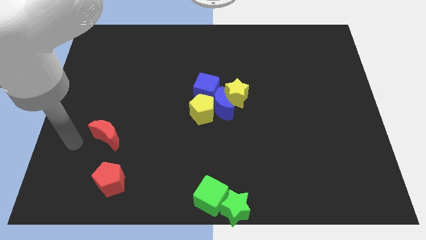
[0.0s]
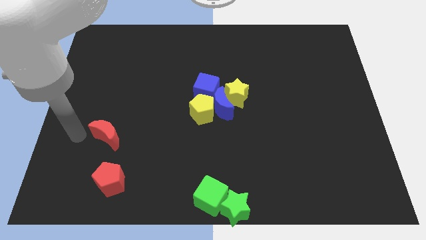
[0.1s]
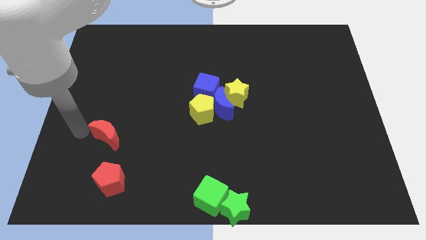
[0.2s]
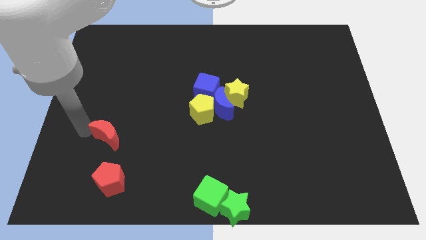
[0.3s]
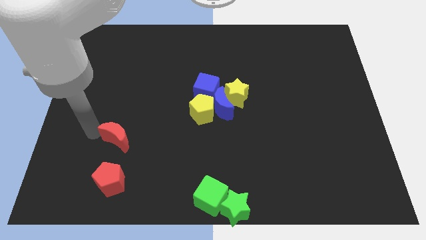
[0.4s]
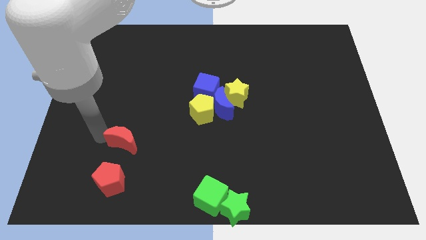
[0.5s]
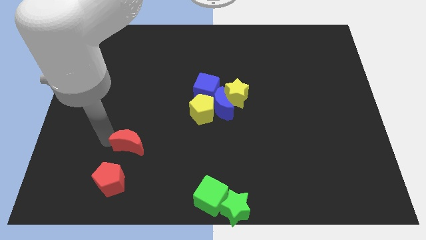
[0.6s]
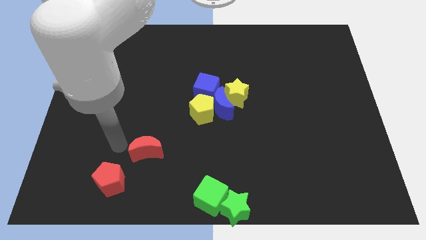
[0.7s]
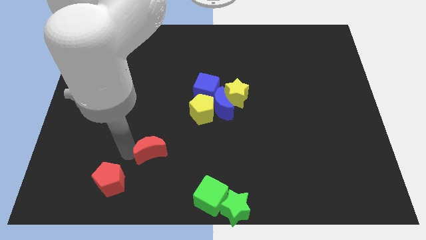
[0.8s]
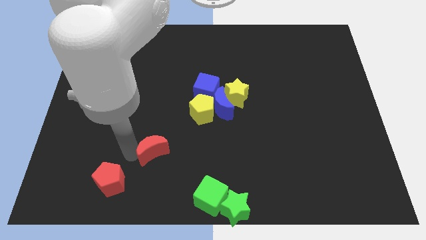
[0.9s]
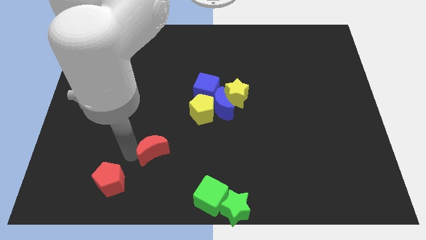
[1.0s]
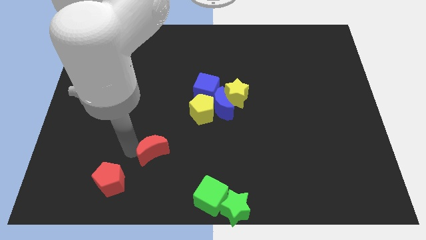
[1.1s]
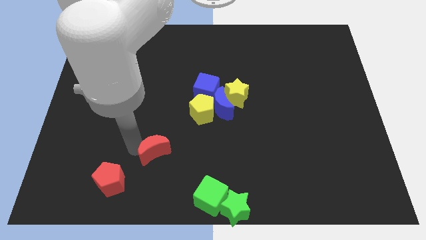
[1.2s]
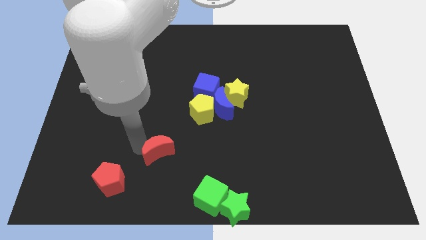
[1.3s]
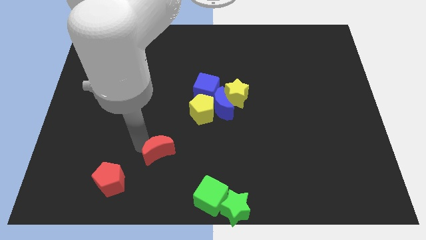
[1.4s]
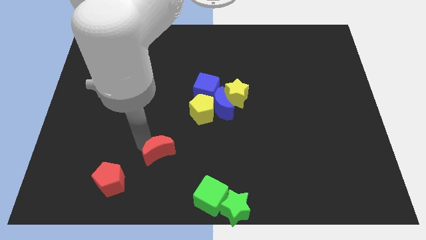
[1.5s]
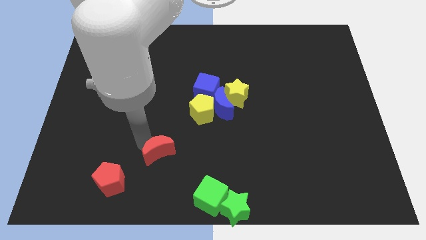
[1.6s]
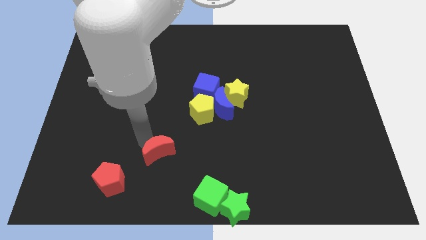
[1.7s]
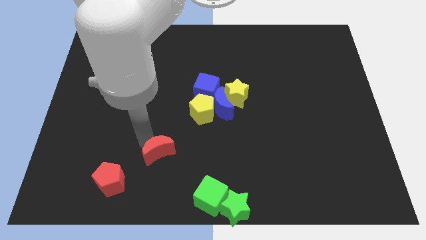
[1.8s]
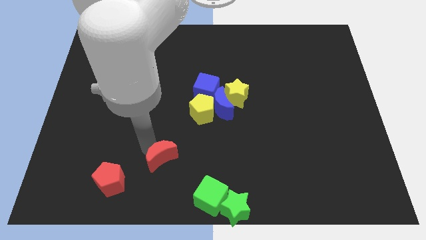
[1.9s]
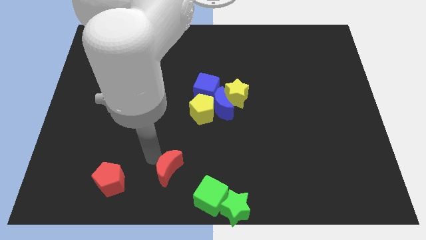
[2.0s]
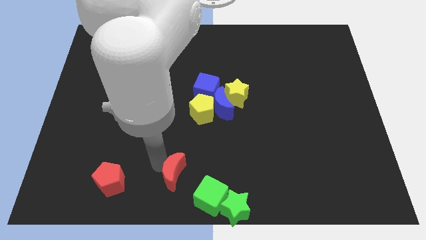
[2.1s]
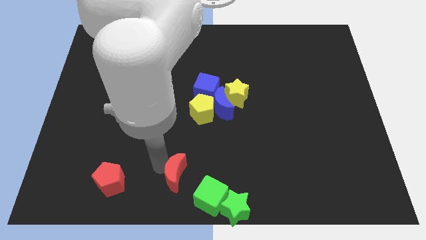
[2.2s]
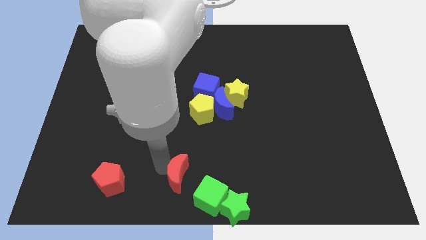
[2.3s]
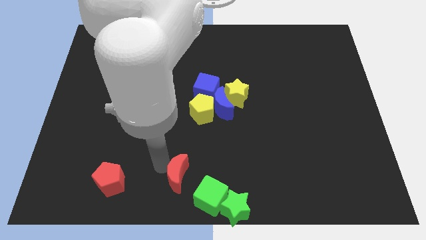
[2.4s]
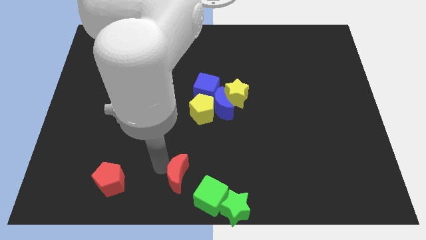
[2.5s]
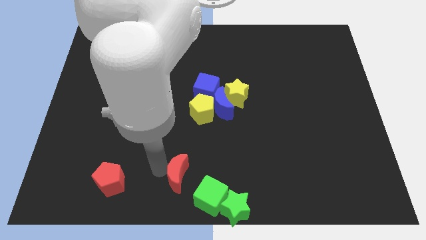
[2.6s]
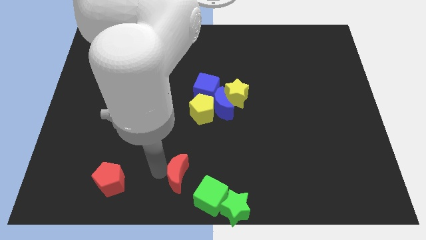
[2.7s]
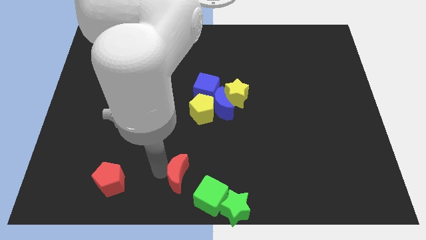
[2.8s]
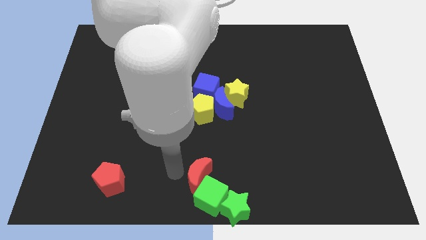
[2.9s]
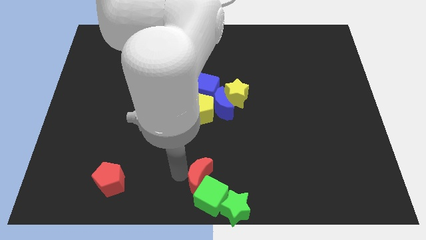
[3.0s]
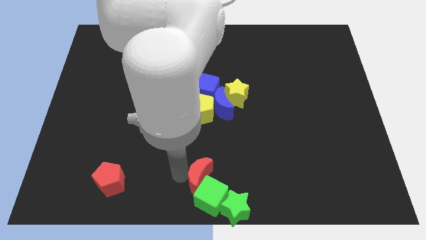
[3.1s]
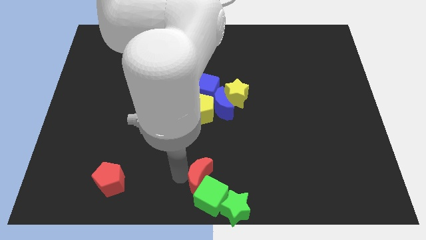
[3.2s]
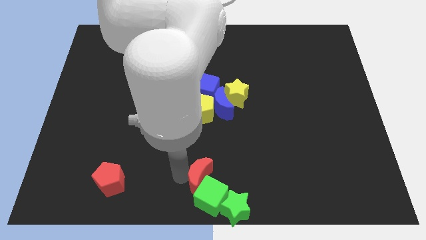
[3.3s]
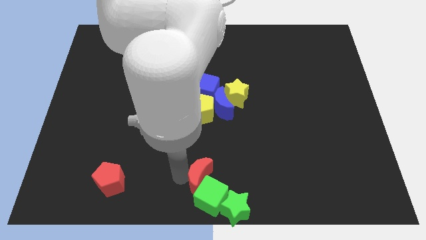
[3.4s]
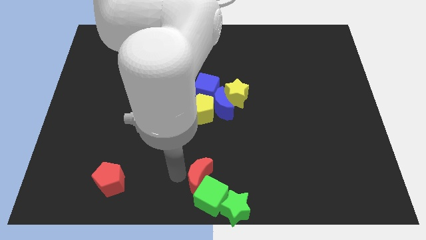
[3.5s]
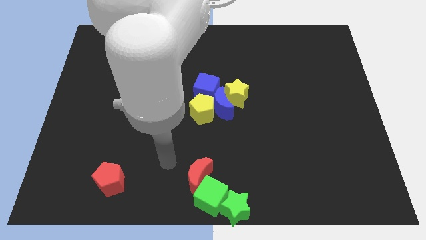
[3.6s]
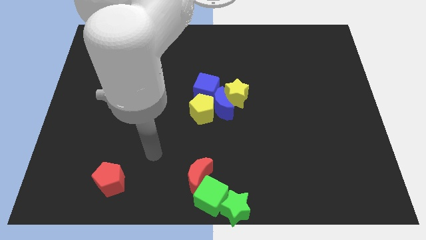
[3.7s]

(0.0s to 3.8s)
move the red crescent into the green cube

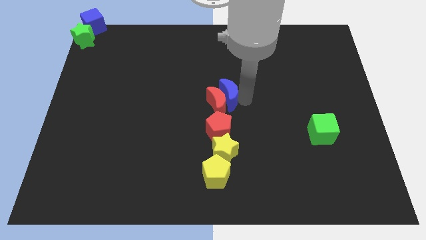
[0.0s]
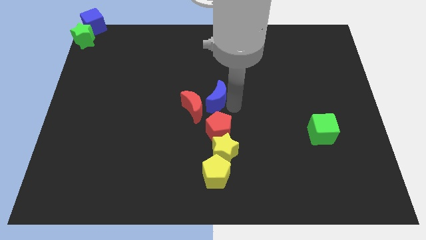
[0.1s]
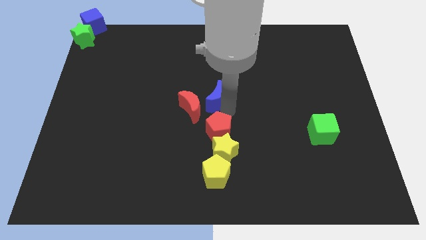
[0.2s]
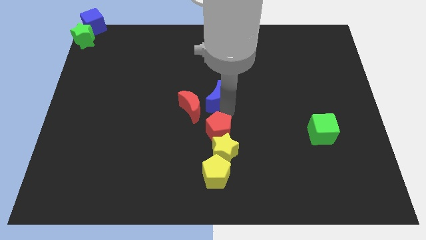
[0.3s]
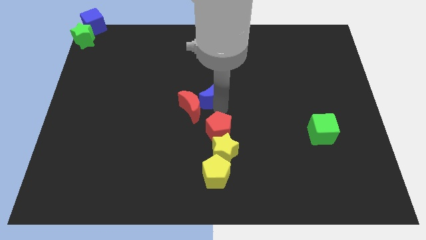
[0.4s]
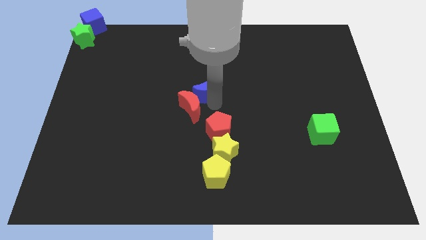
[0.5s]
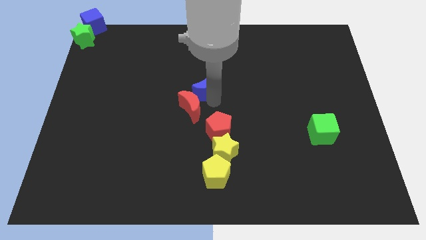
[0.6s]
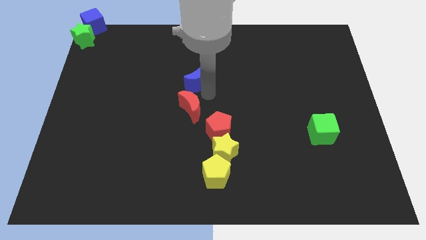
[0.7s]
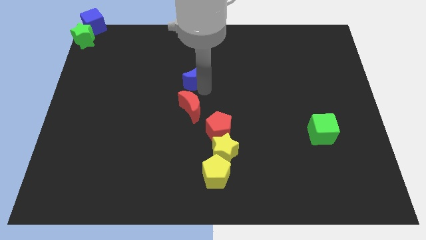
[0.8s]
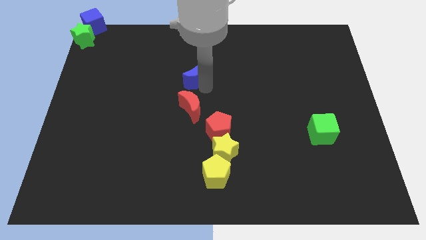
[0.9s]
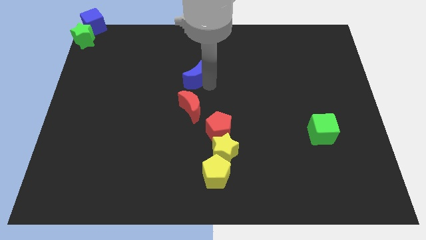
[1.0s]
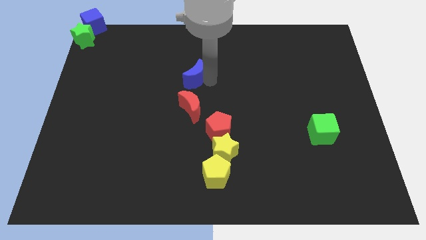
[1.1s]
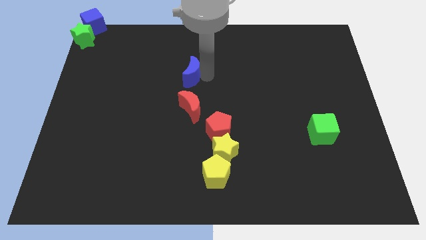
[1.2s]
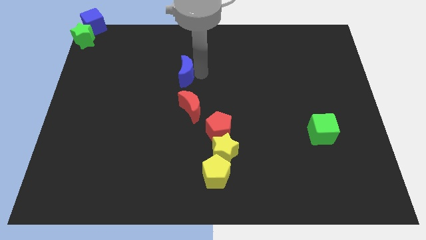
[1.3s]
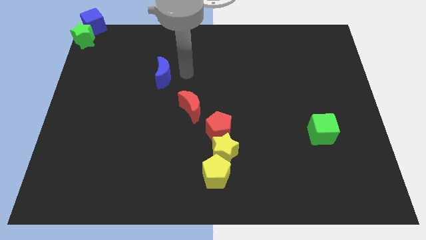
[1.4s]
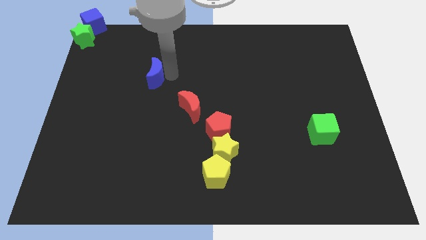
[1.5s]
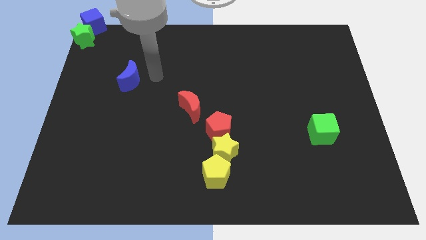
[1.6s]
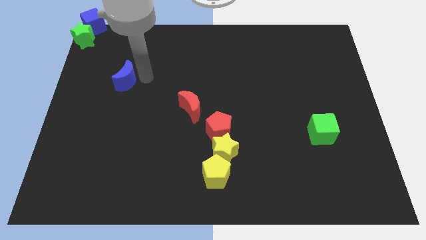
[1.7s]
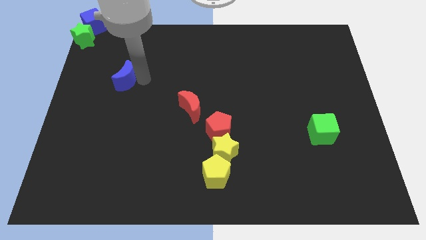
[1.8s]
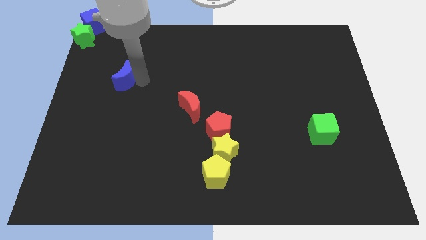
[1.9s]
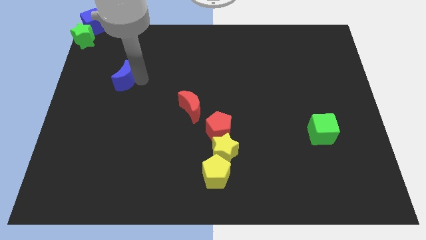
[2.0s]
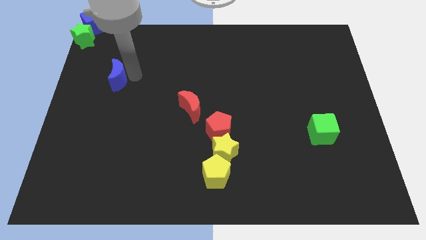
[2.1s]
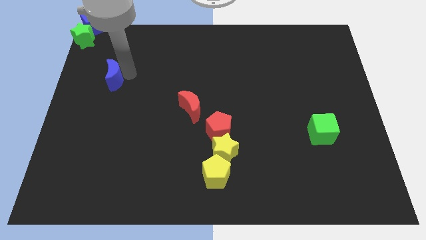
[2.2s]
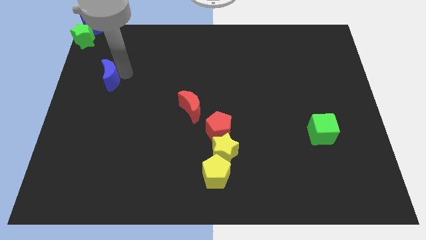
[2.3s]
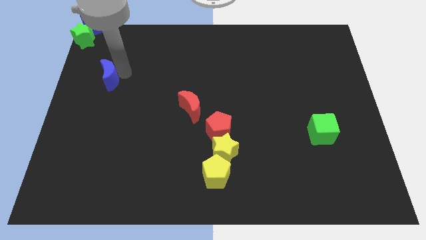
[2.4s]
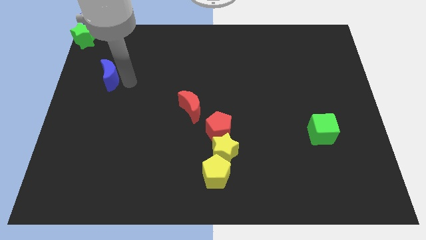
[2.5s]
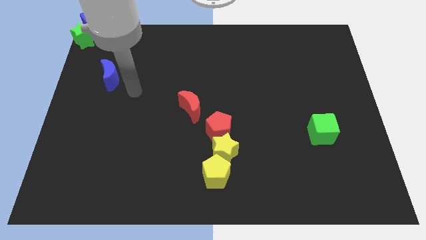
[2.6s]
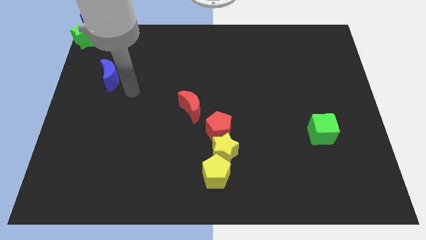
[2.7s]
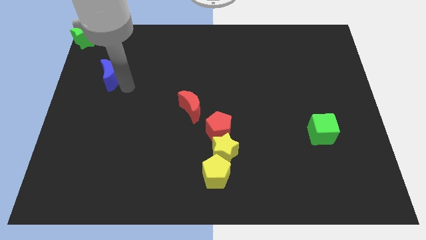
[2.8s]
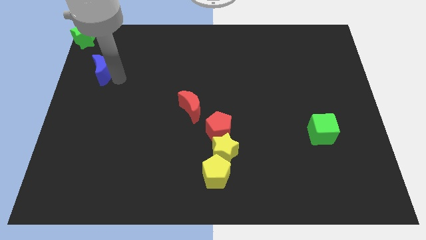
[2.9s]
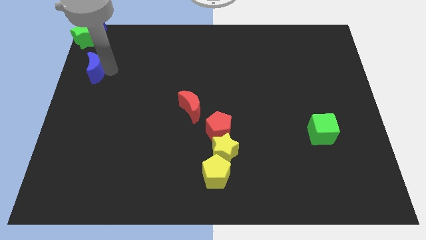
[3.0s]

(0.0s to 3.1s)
separate the blue crescent from red crescent

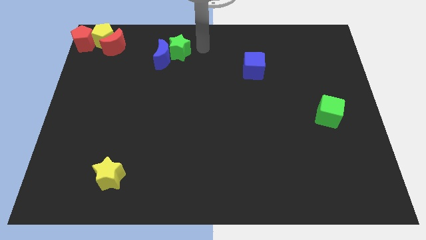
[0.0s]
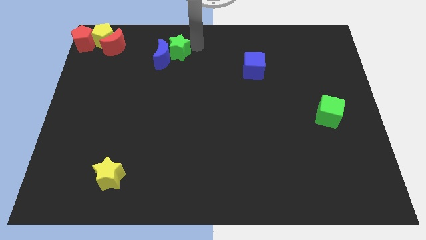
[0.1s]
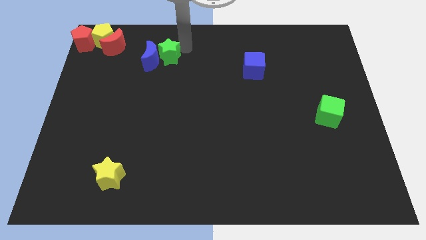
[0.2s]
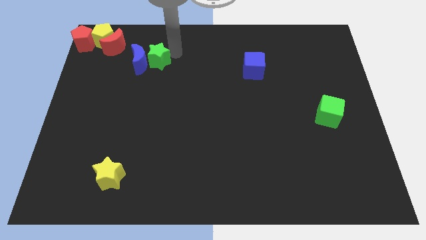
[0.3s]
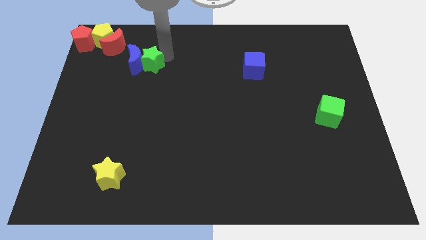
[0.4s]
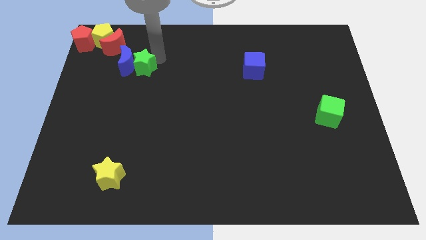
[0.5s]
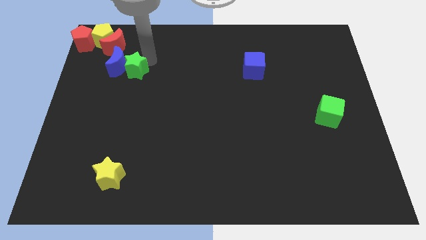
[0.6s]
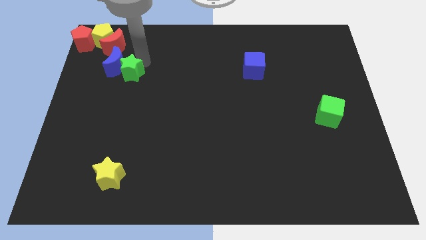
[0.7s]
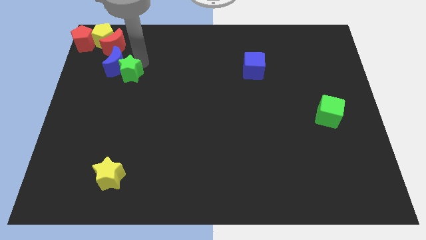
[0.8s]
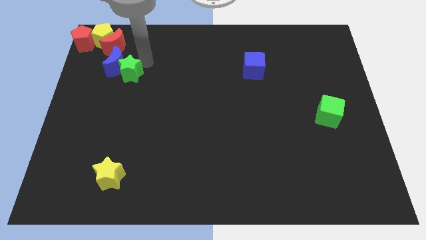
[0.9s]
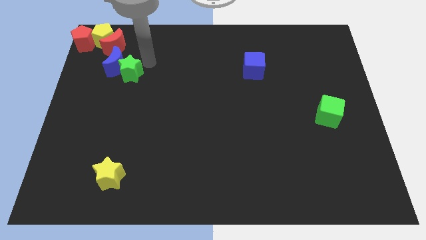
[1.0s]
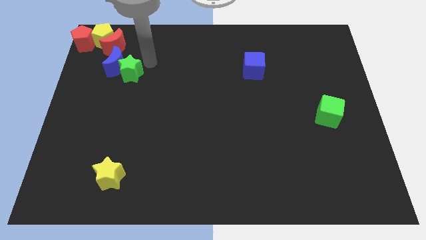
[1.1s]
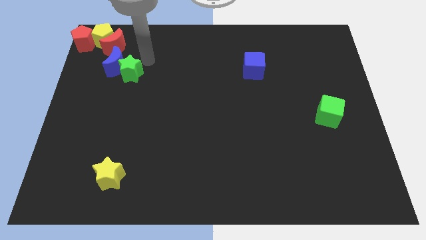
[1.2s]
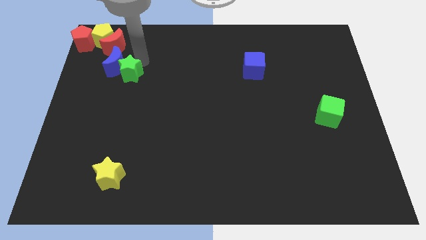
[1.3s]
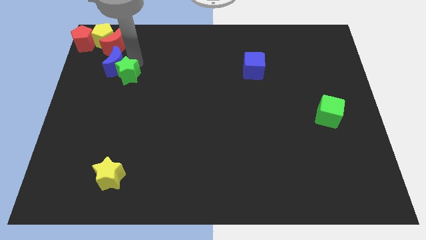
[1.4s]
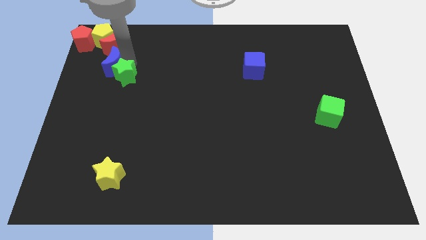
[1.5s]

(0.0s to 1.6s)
move the blue moon and green star towards center left

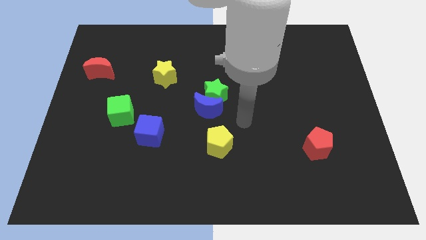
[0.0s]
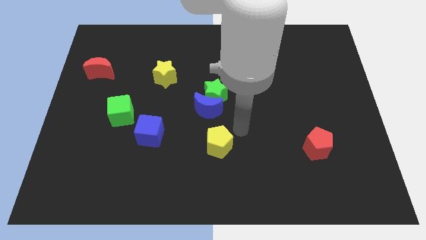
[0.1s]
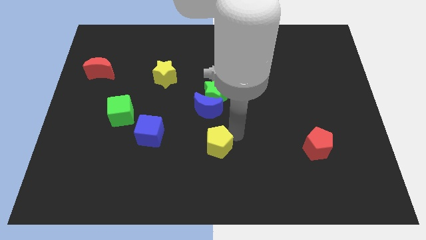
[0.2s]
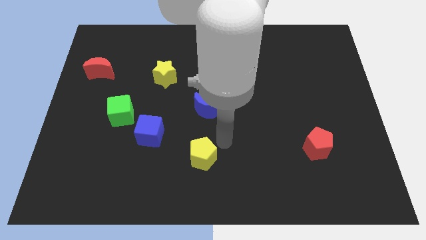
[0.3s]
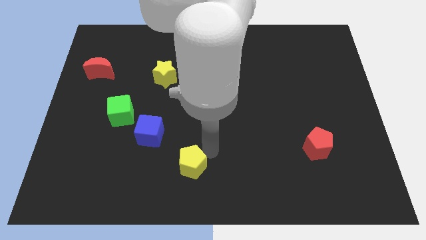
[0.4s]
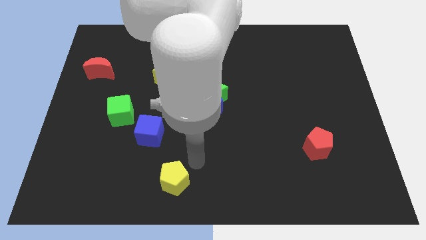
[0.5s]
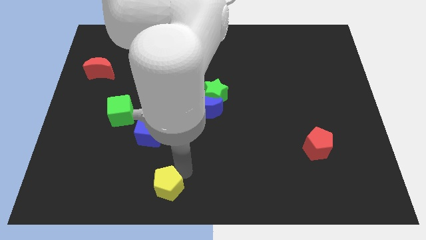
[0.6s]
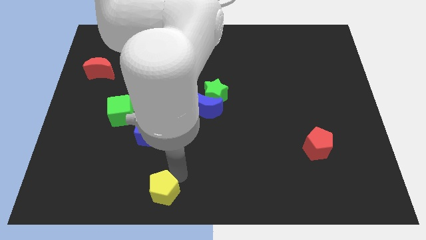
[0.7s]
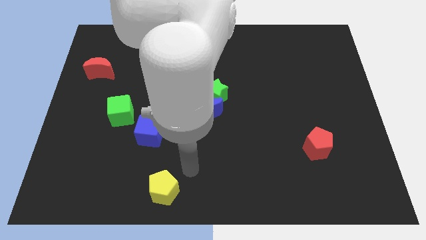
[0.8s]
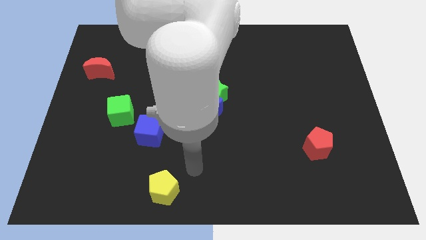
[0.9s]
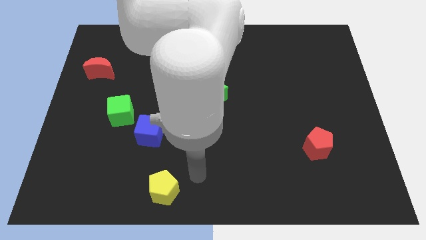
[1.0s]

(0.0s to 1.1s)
slide yellow pentagon to the right bottom of blue cube
